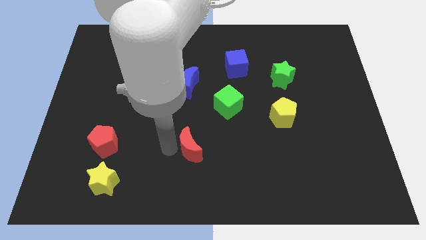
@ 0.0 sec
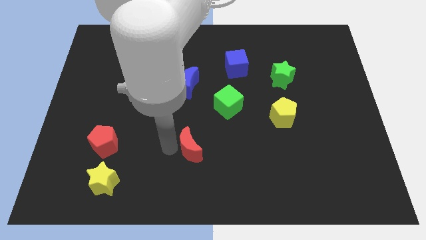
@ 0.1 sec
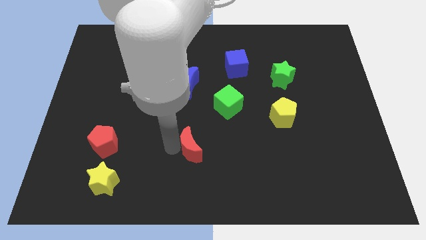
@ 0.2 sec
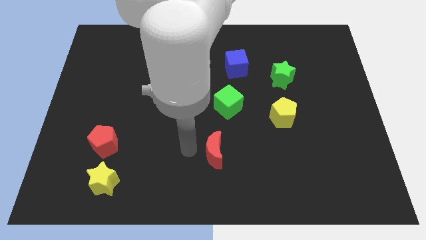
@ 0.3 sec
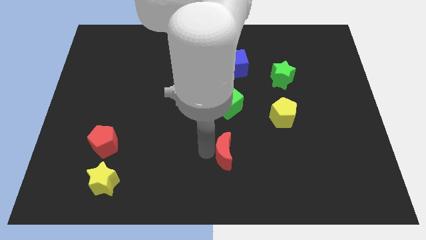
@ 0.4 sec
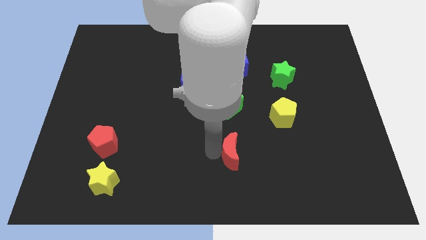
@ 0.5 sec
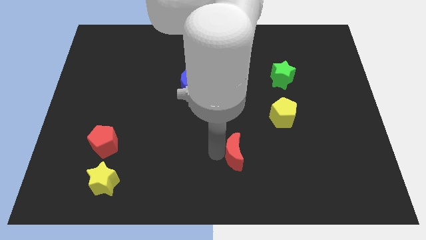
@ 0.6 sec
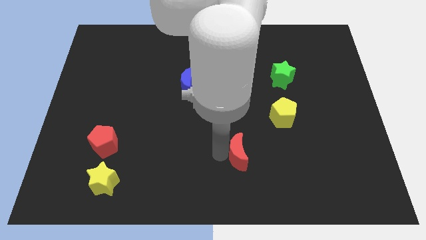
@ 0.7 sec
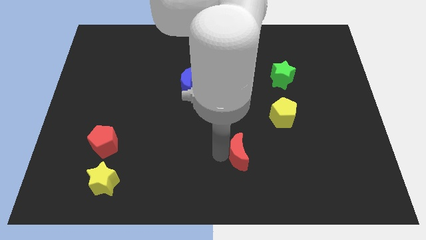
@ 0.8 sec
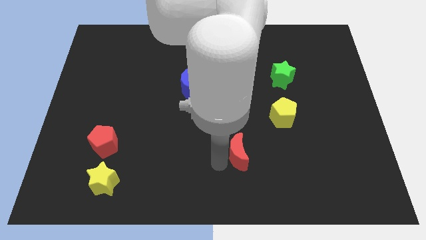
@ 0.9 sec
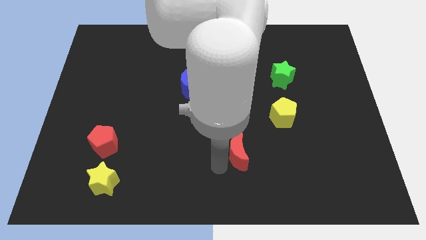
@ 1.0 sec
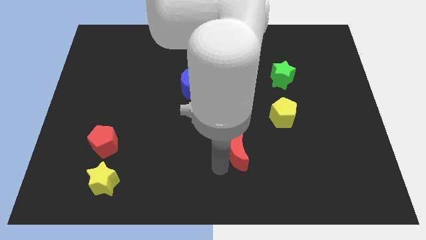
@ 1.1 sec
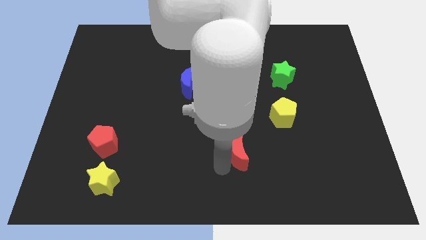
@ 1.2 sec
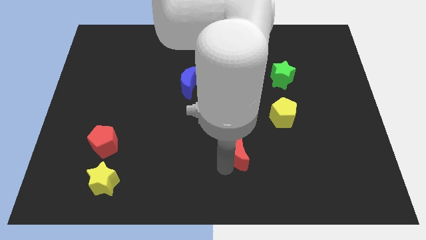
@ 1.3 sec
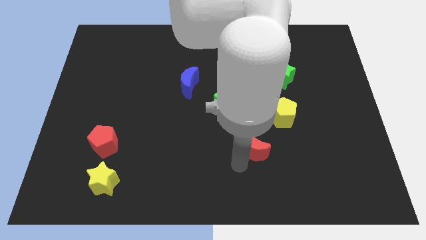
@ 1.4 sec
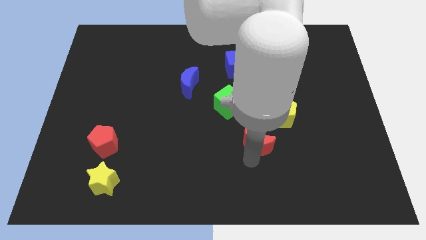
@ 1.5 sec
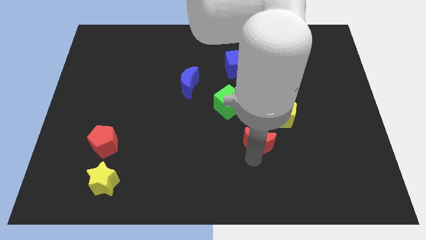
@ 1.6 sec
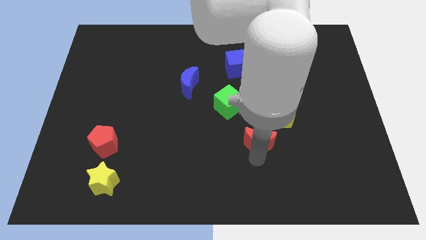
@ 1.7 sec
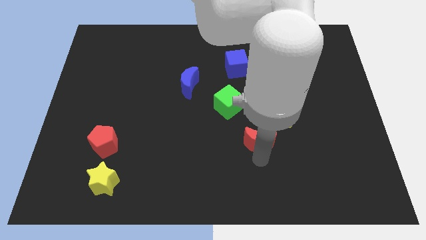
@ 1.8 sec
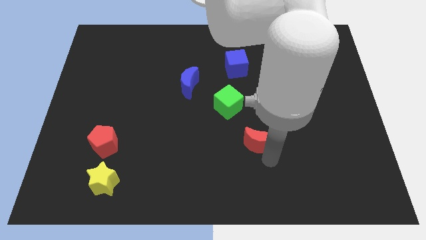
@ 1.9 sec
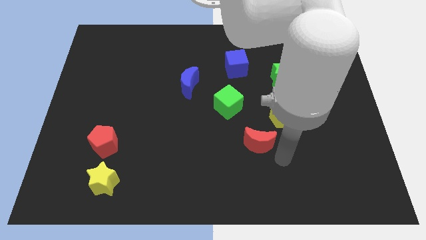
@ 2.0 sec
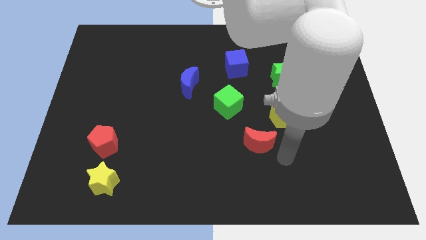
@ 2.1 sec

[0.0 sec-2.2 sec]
move the red moon to the bottom left of the yellow pentagon

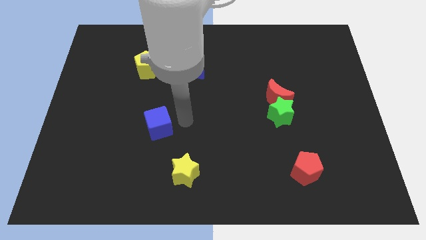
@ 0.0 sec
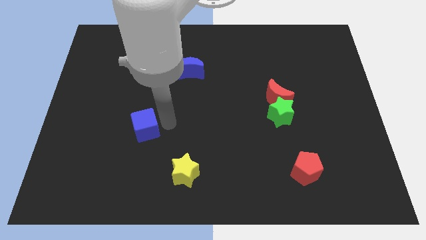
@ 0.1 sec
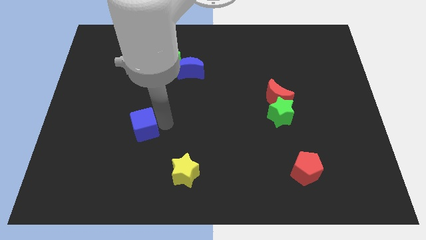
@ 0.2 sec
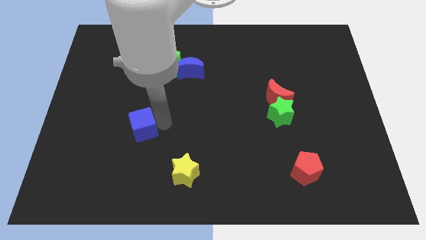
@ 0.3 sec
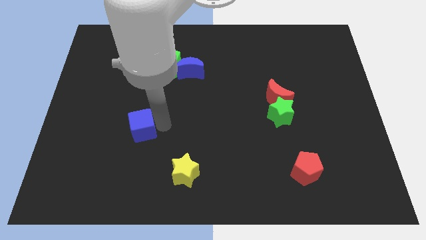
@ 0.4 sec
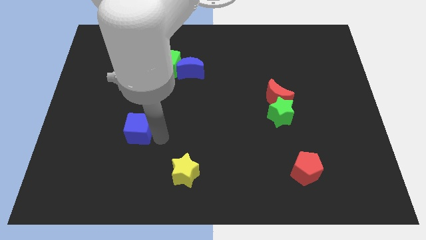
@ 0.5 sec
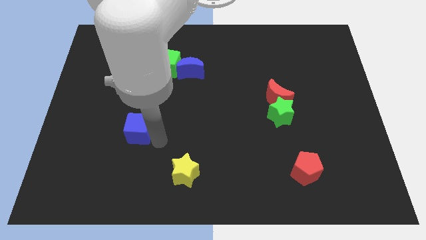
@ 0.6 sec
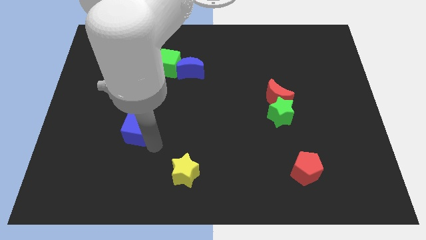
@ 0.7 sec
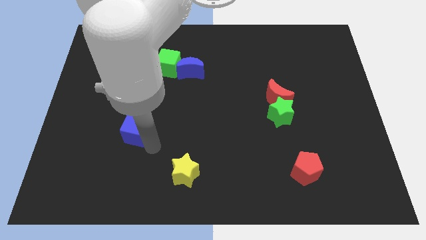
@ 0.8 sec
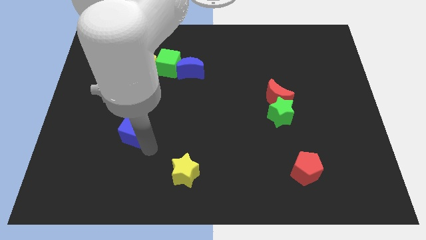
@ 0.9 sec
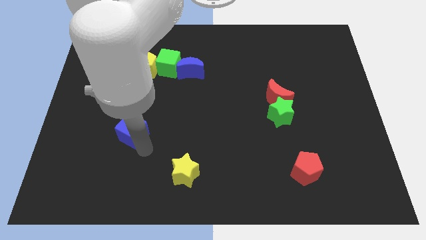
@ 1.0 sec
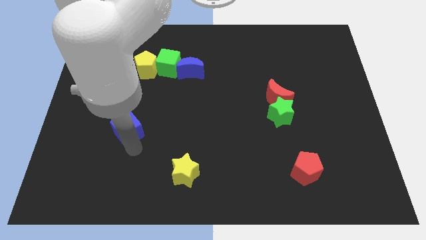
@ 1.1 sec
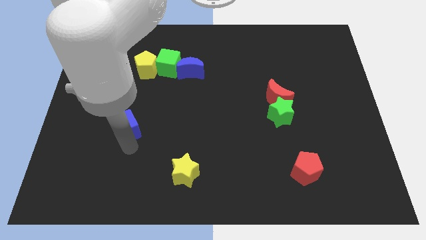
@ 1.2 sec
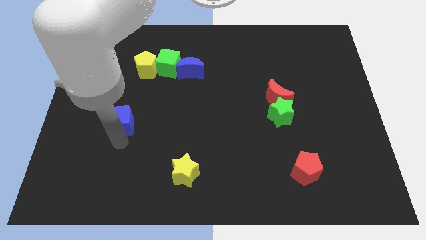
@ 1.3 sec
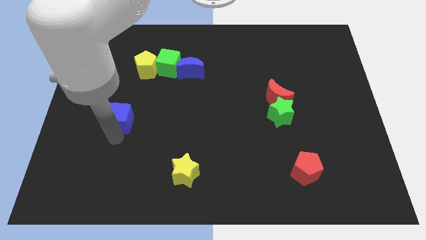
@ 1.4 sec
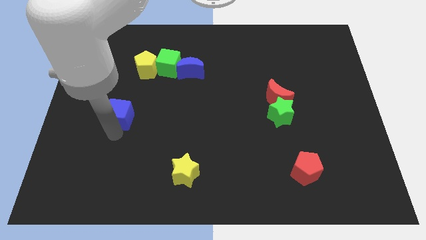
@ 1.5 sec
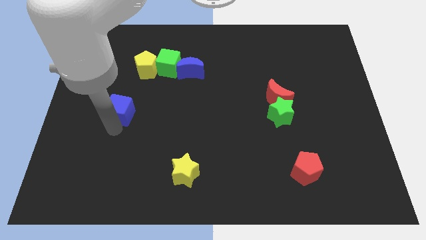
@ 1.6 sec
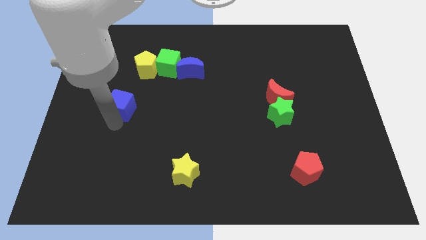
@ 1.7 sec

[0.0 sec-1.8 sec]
move the blue cube to the left side of the board

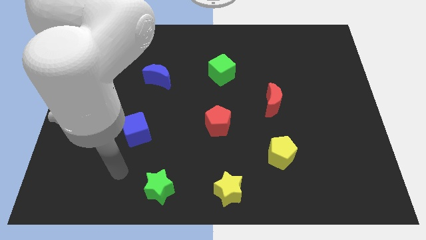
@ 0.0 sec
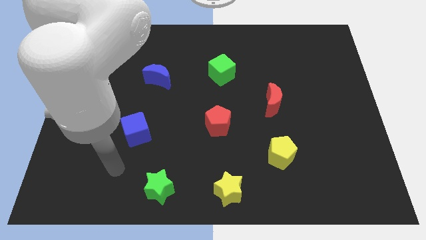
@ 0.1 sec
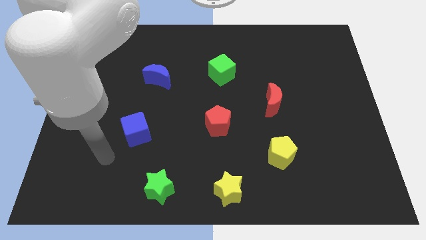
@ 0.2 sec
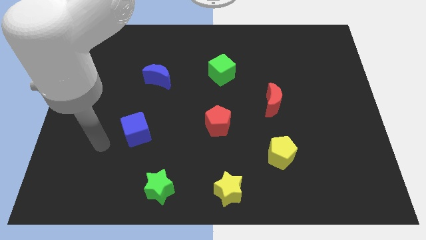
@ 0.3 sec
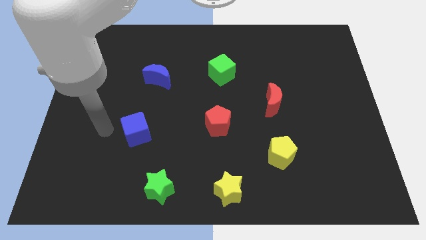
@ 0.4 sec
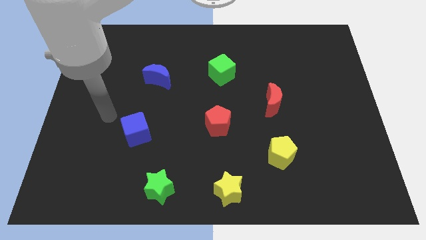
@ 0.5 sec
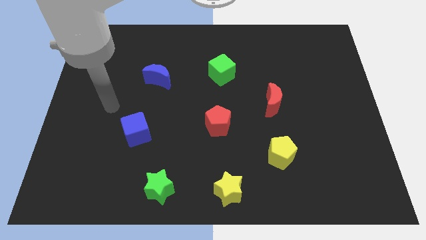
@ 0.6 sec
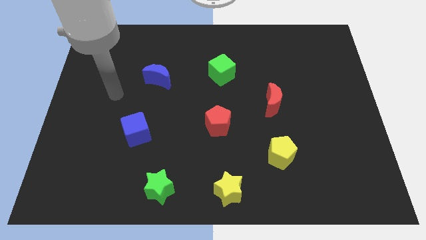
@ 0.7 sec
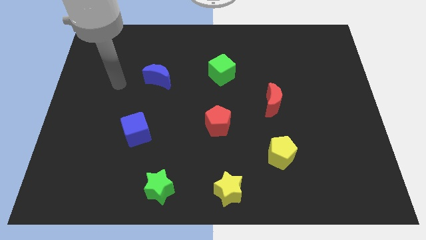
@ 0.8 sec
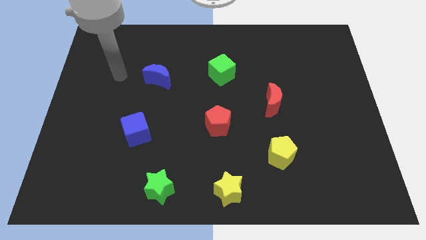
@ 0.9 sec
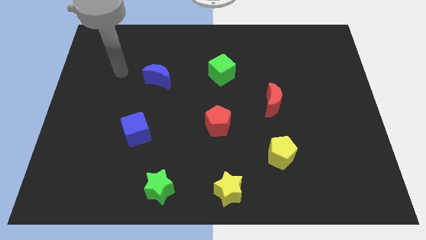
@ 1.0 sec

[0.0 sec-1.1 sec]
move your arm to the left side of the blue crescent

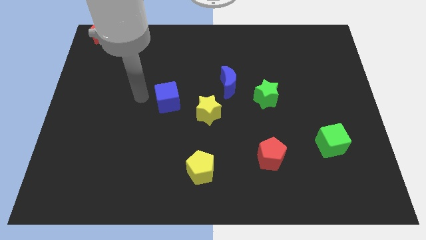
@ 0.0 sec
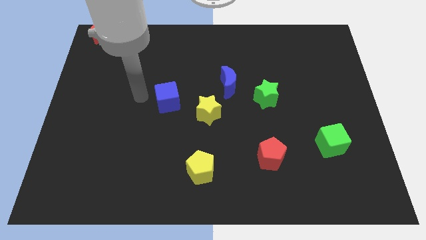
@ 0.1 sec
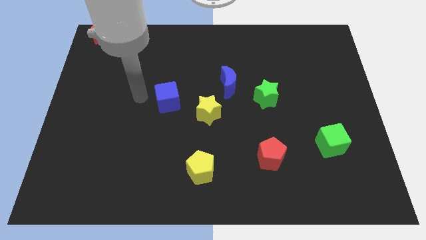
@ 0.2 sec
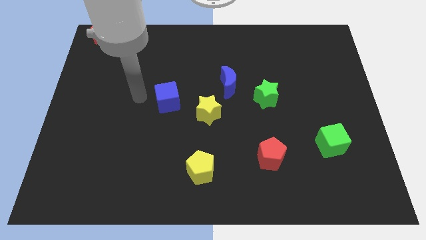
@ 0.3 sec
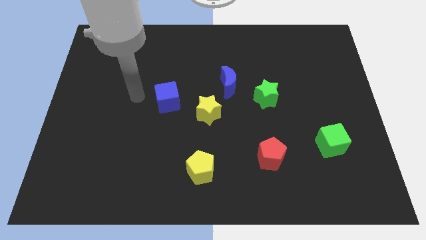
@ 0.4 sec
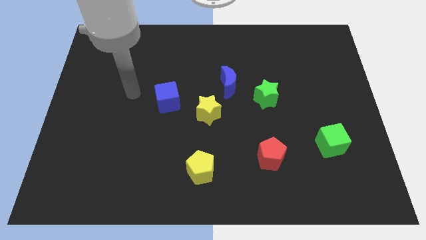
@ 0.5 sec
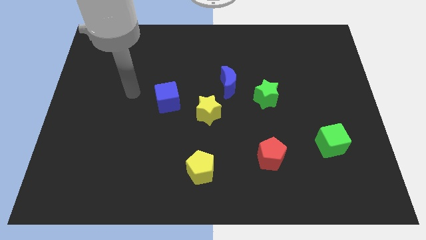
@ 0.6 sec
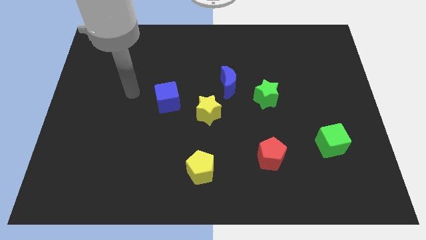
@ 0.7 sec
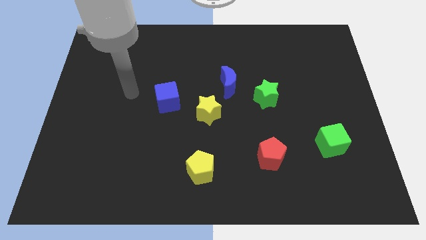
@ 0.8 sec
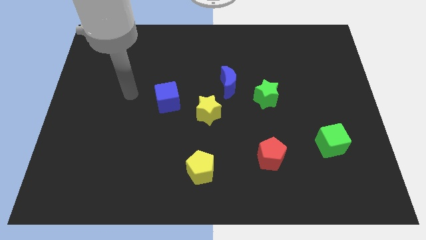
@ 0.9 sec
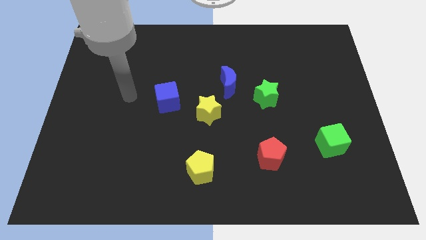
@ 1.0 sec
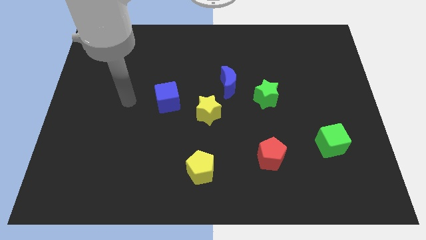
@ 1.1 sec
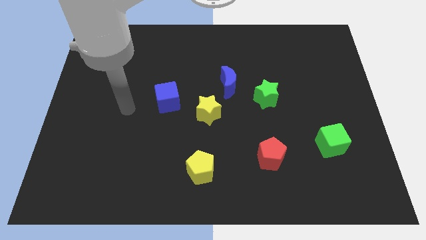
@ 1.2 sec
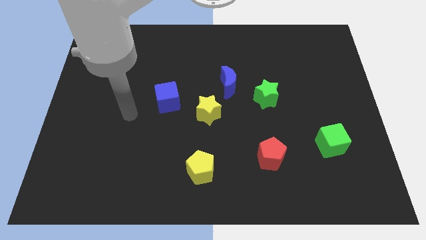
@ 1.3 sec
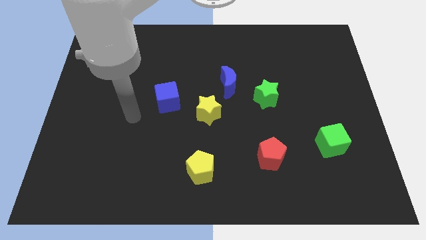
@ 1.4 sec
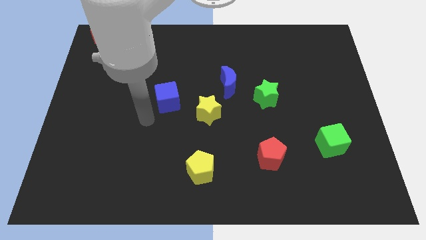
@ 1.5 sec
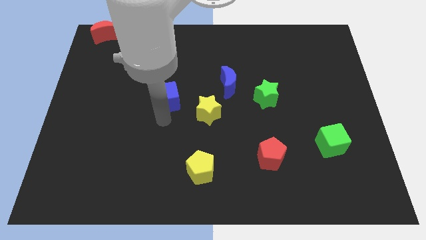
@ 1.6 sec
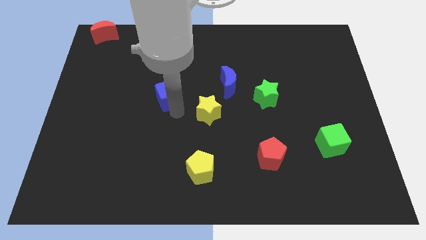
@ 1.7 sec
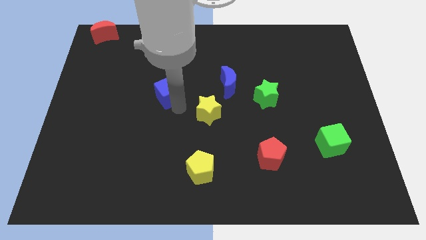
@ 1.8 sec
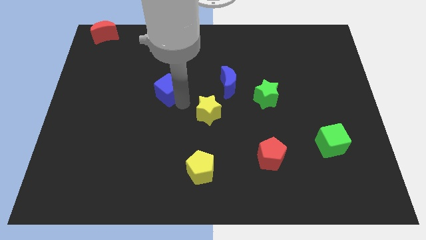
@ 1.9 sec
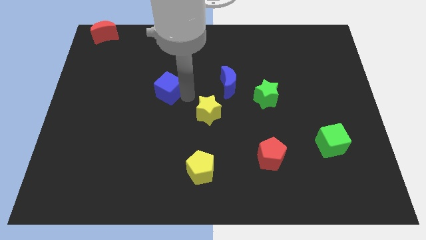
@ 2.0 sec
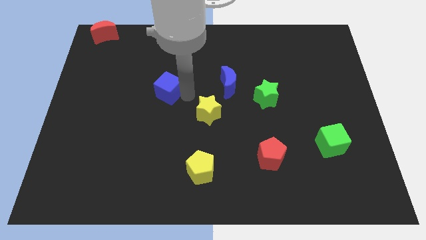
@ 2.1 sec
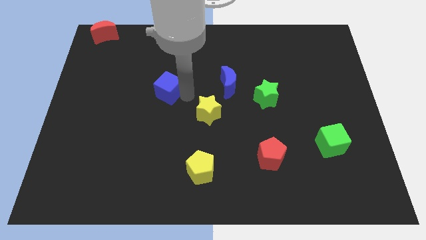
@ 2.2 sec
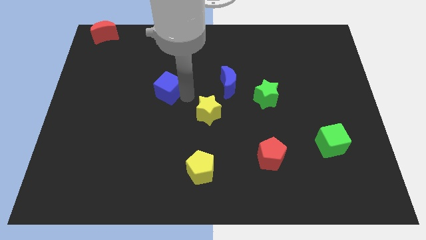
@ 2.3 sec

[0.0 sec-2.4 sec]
touch the blue cube

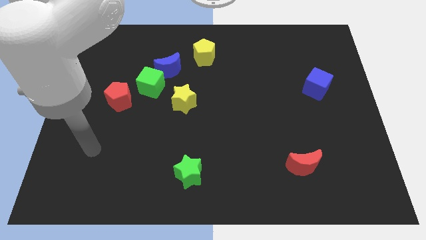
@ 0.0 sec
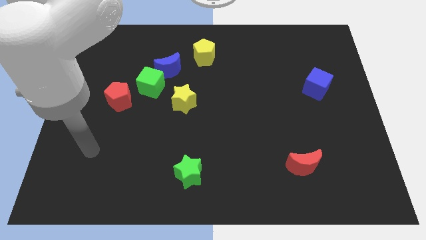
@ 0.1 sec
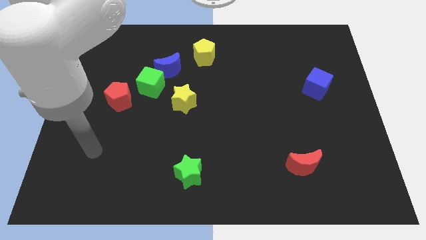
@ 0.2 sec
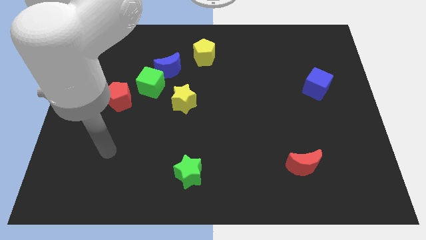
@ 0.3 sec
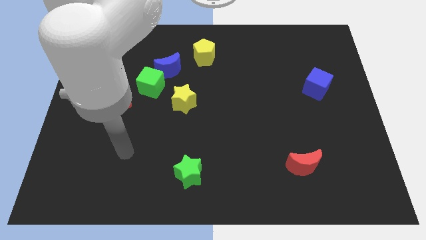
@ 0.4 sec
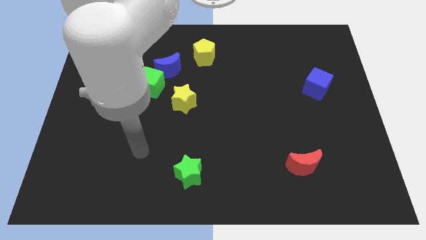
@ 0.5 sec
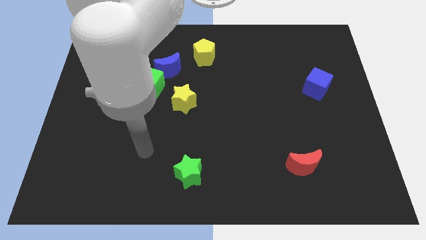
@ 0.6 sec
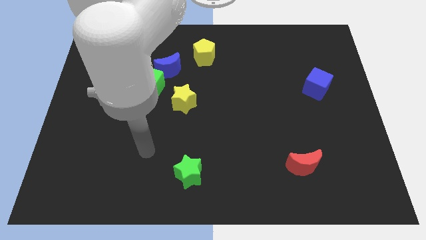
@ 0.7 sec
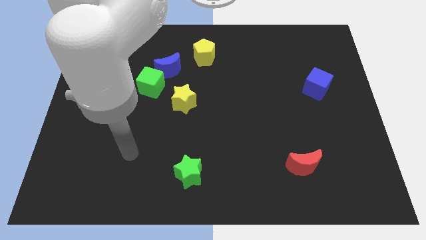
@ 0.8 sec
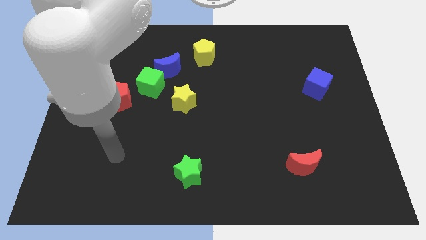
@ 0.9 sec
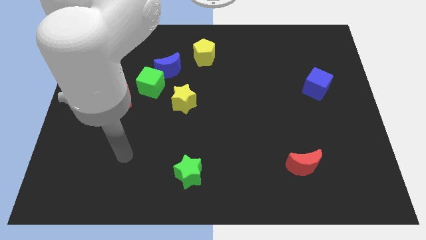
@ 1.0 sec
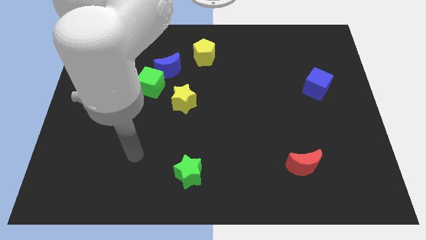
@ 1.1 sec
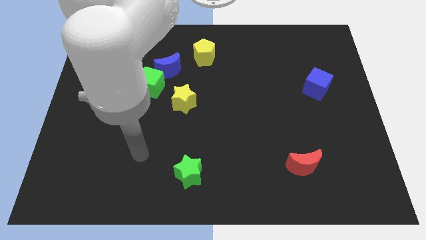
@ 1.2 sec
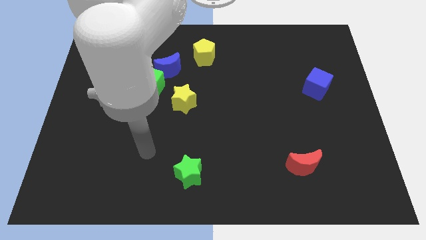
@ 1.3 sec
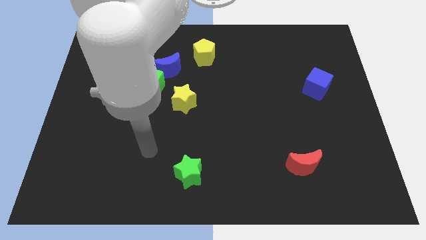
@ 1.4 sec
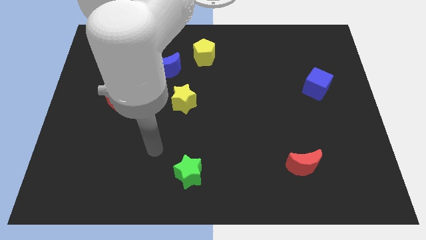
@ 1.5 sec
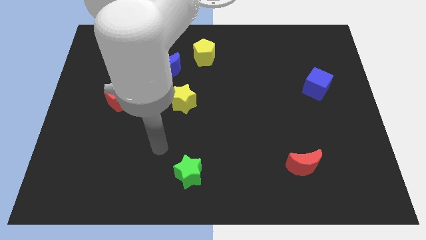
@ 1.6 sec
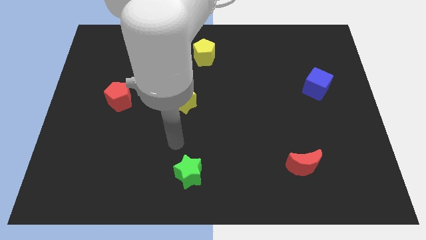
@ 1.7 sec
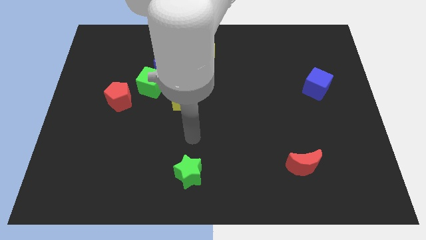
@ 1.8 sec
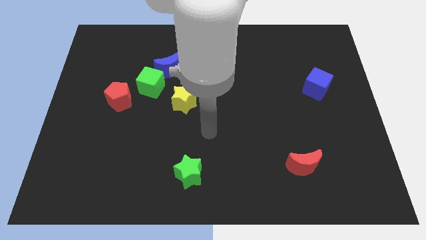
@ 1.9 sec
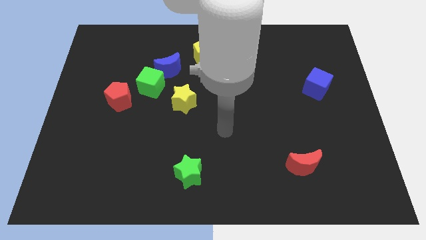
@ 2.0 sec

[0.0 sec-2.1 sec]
move your arm towards the center of the board
